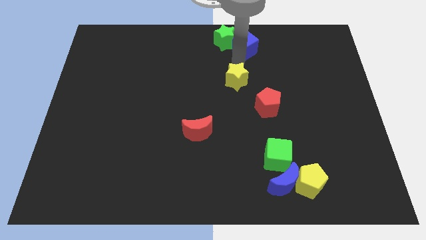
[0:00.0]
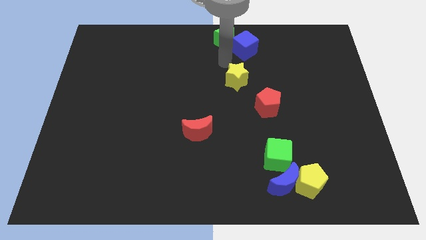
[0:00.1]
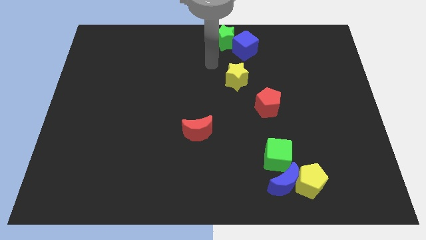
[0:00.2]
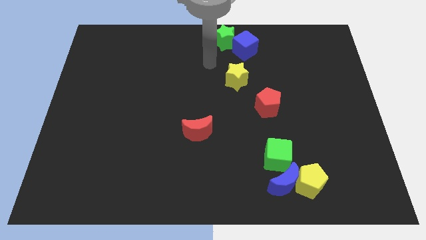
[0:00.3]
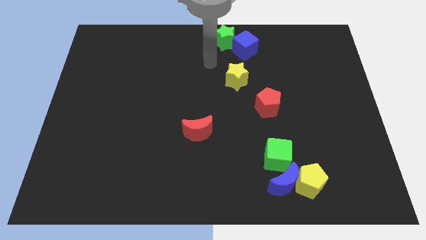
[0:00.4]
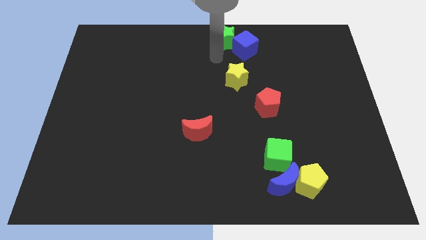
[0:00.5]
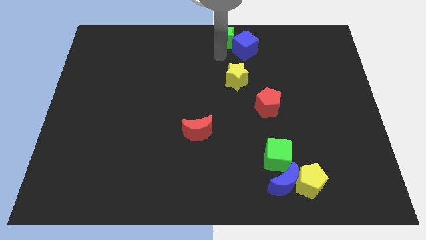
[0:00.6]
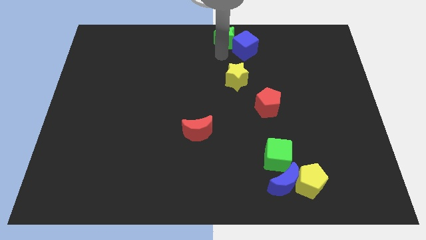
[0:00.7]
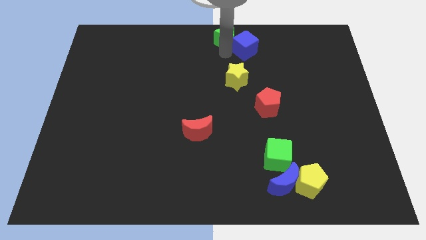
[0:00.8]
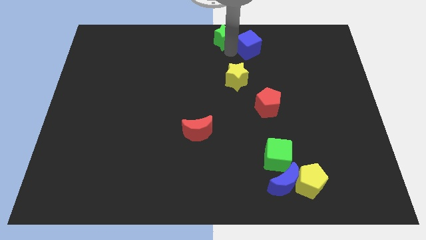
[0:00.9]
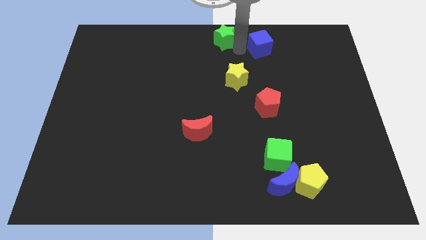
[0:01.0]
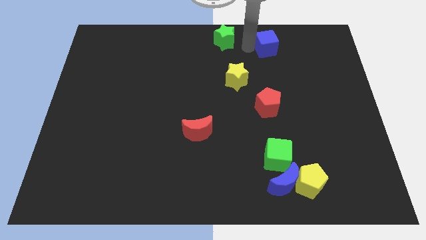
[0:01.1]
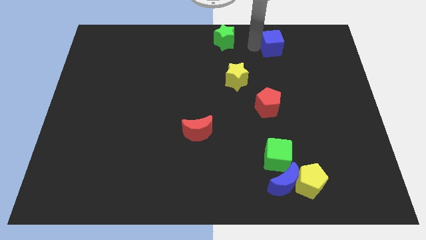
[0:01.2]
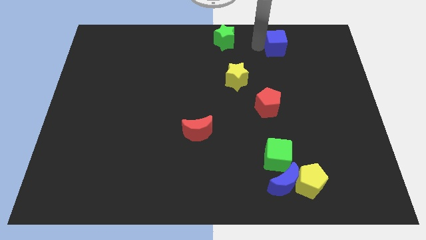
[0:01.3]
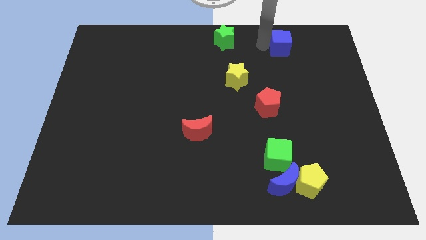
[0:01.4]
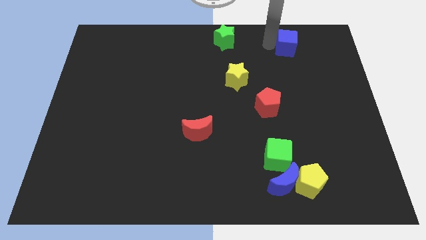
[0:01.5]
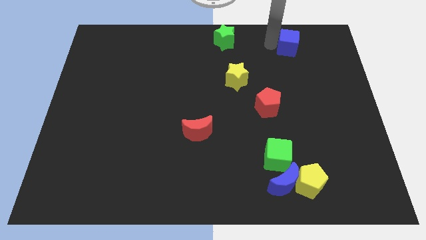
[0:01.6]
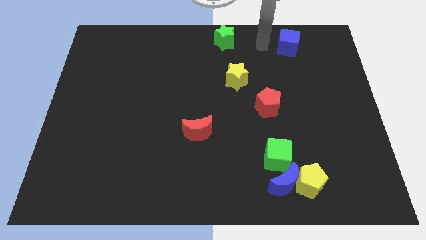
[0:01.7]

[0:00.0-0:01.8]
move the blue cube towards the top right

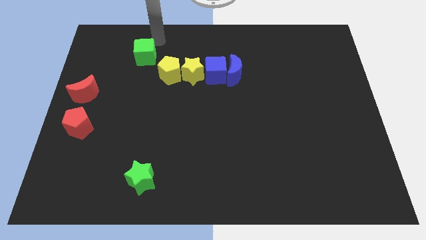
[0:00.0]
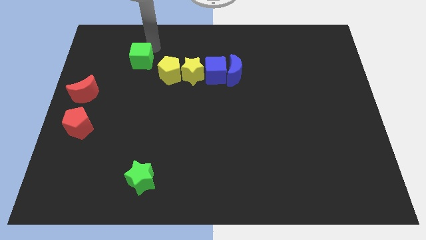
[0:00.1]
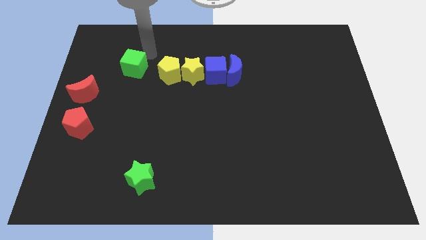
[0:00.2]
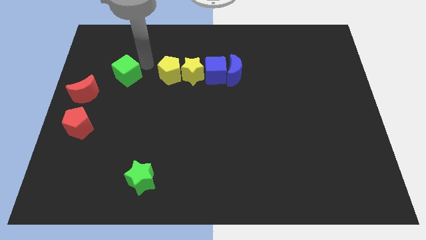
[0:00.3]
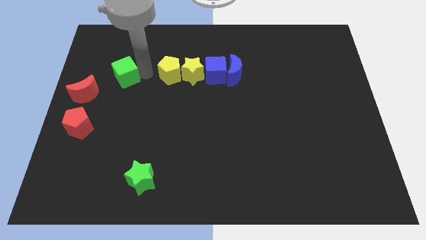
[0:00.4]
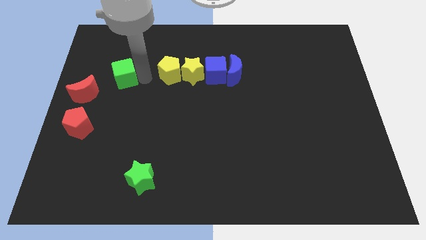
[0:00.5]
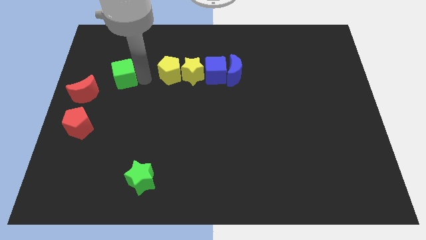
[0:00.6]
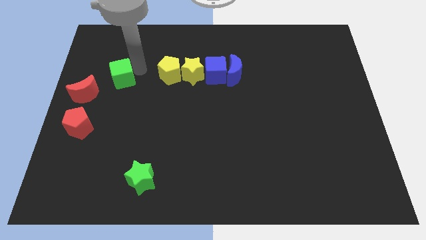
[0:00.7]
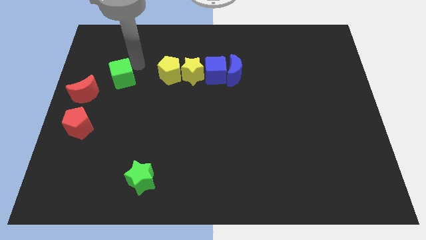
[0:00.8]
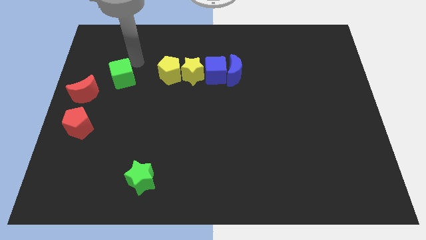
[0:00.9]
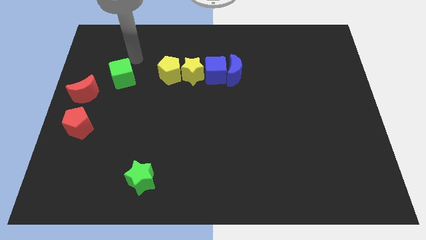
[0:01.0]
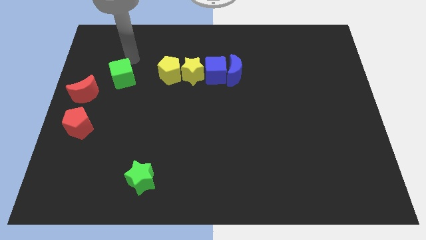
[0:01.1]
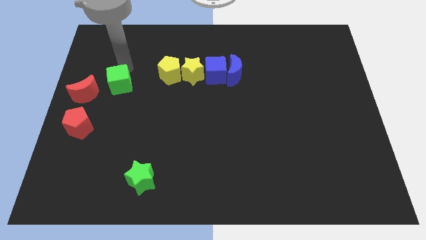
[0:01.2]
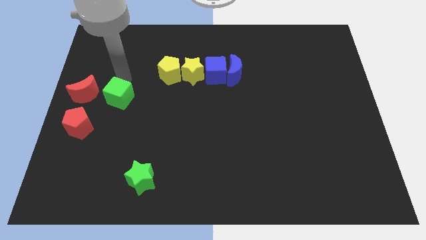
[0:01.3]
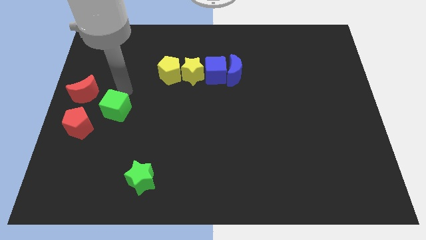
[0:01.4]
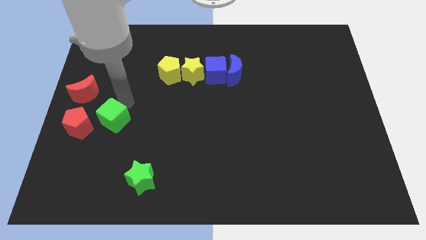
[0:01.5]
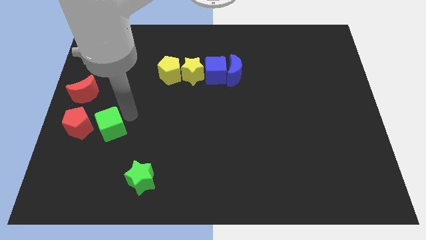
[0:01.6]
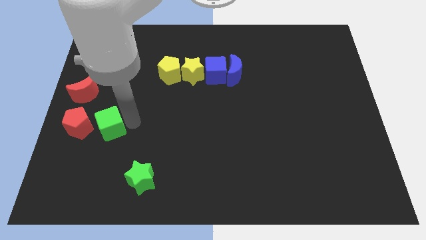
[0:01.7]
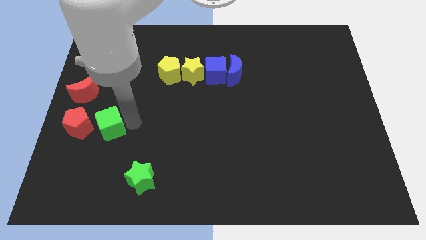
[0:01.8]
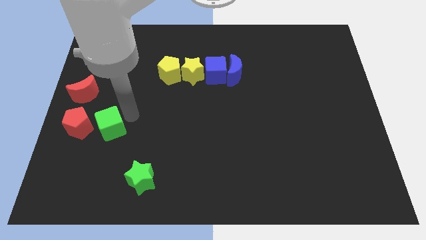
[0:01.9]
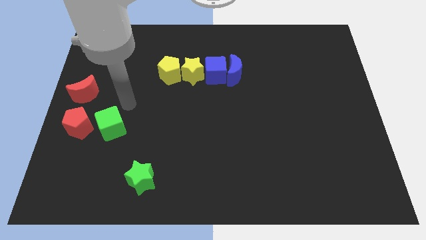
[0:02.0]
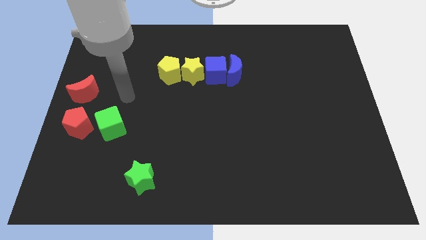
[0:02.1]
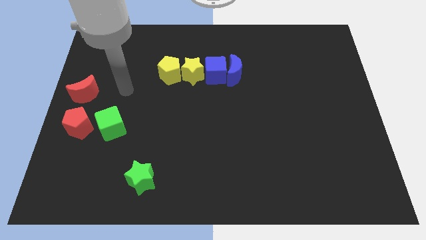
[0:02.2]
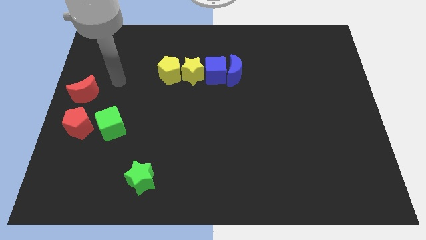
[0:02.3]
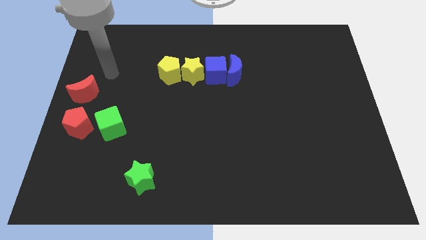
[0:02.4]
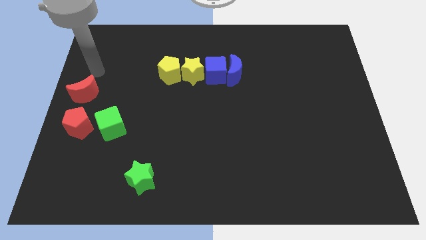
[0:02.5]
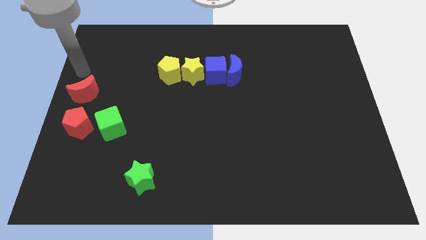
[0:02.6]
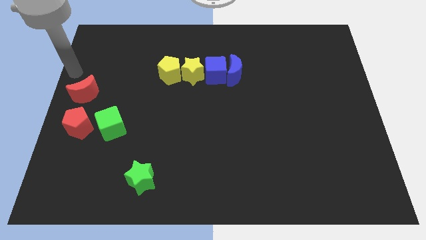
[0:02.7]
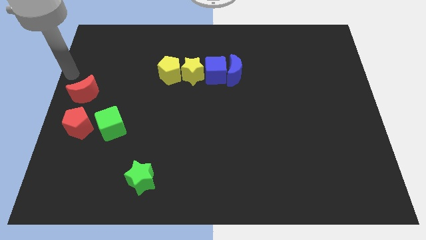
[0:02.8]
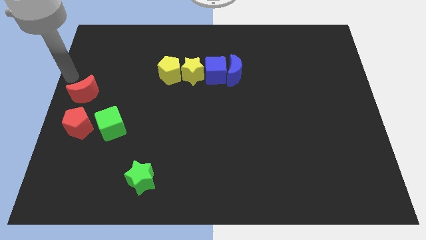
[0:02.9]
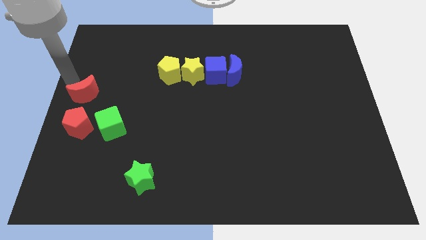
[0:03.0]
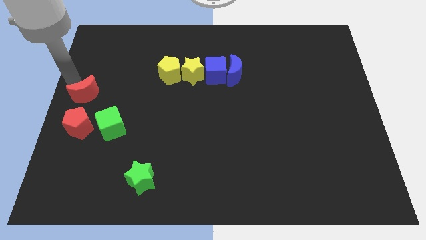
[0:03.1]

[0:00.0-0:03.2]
push the green cube to the right side of the red pentagon

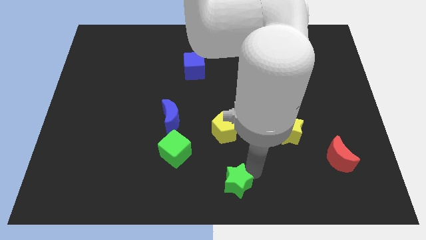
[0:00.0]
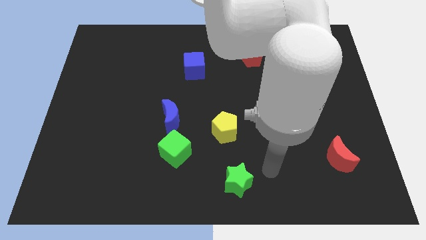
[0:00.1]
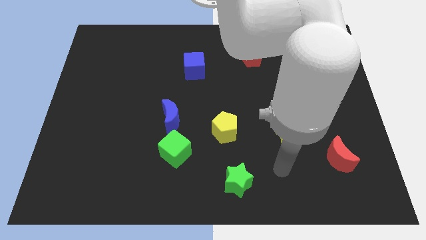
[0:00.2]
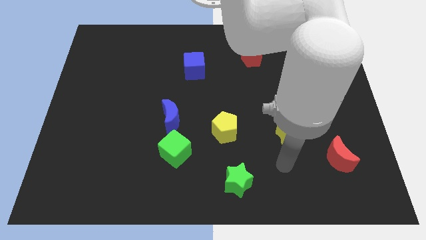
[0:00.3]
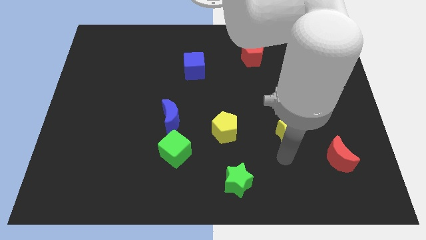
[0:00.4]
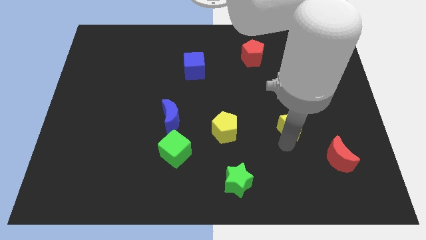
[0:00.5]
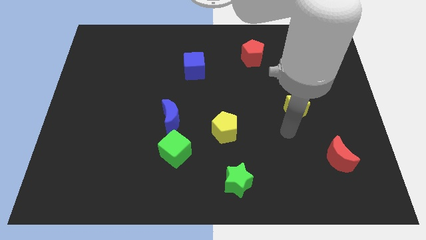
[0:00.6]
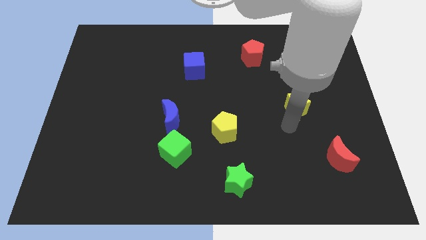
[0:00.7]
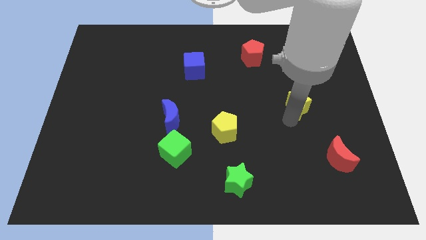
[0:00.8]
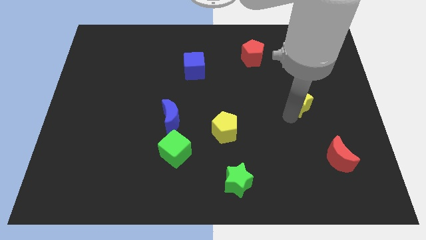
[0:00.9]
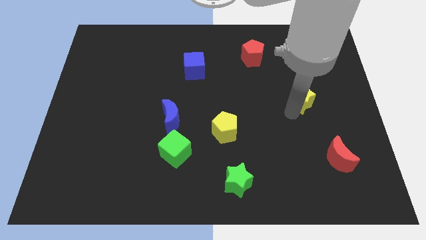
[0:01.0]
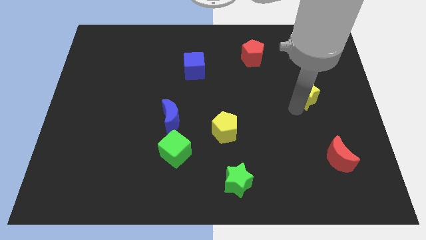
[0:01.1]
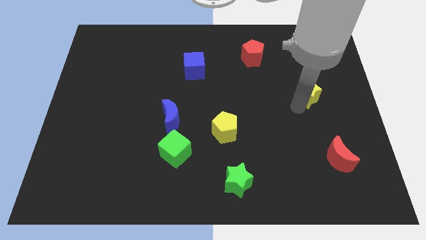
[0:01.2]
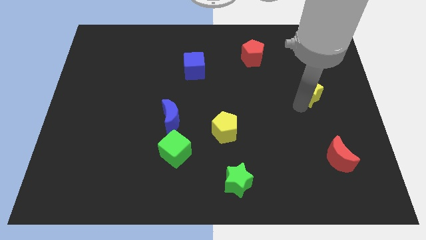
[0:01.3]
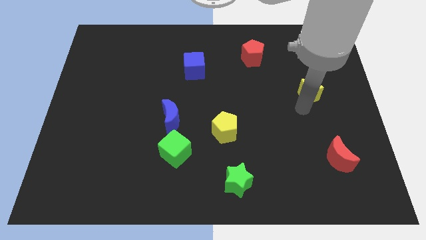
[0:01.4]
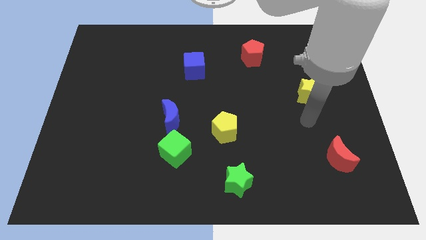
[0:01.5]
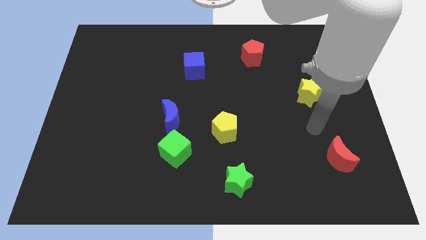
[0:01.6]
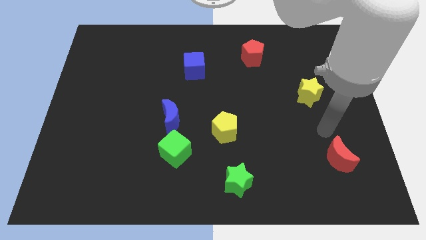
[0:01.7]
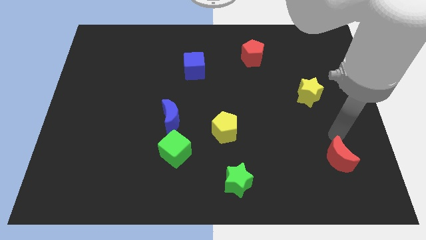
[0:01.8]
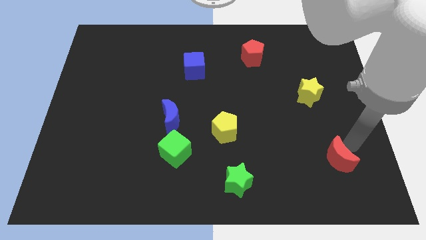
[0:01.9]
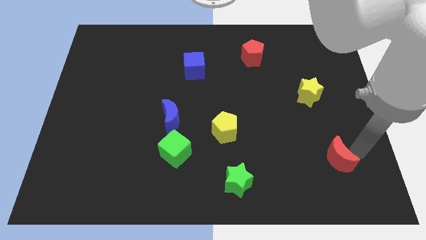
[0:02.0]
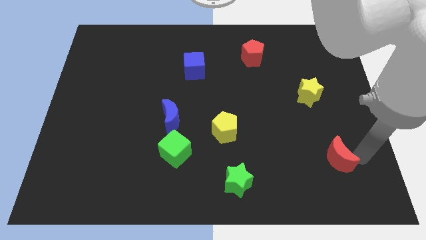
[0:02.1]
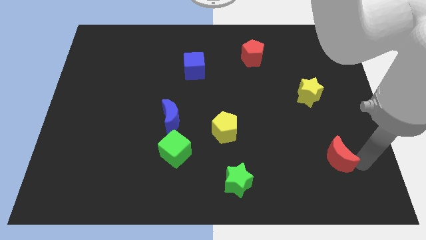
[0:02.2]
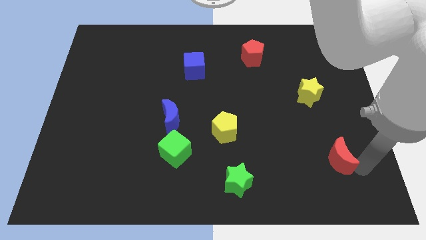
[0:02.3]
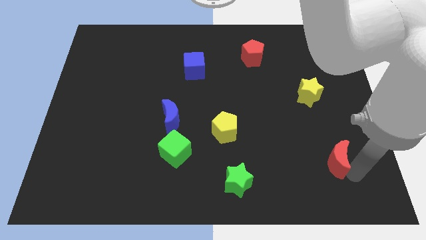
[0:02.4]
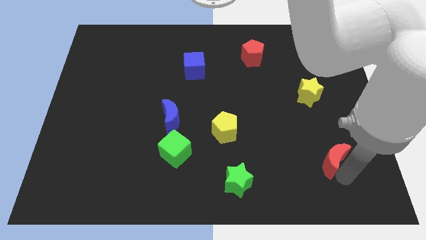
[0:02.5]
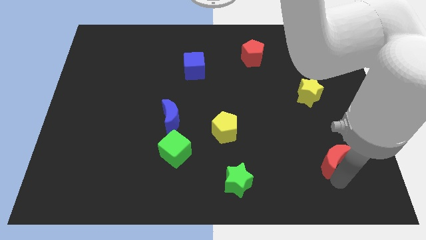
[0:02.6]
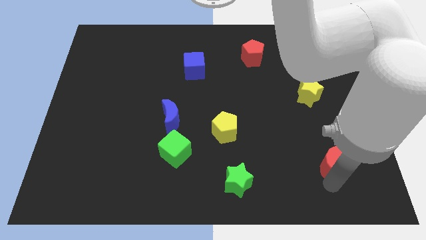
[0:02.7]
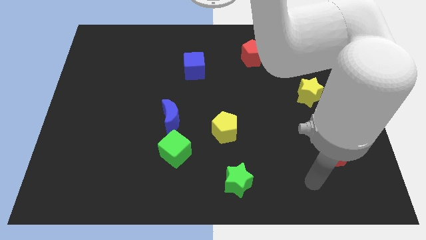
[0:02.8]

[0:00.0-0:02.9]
place yellow star and red moon in a vertical line

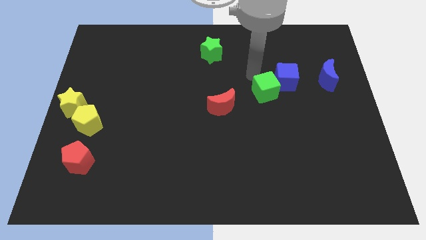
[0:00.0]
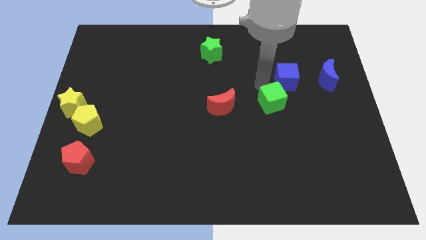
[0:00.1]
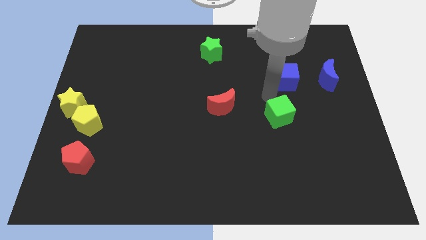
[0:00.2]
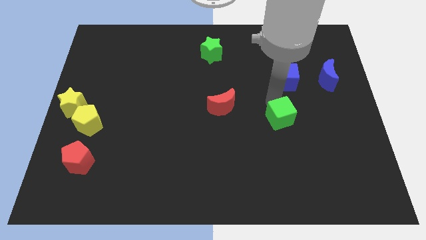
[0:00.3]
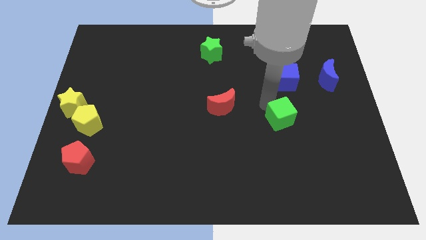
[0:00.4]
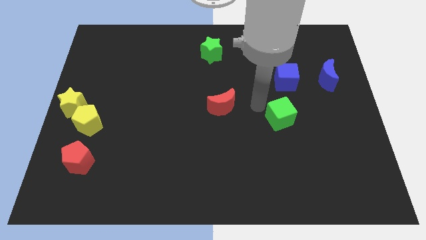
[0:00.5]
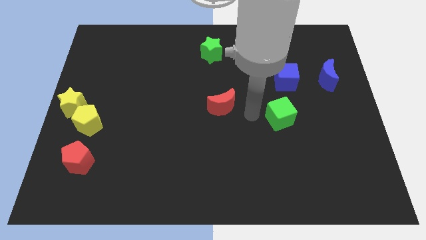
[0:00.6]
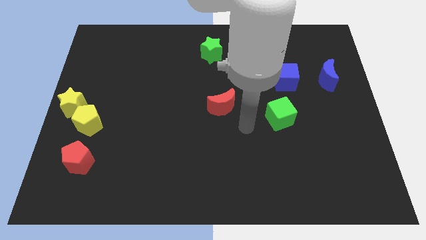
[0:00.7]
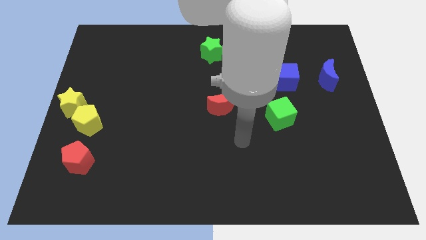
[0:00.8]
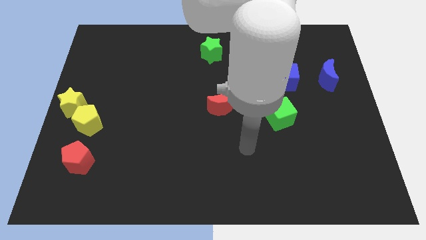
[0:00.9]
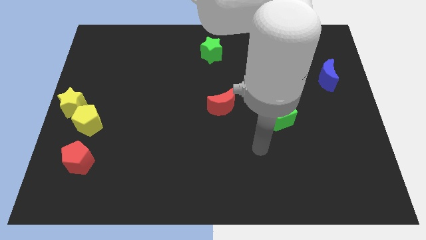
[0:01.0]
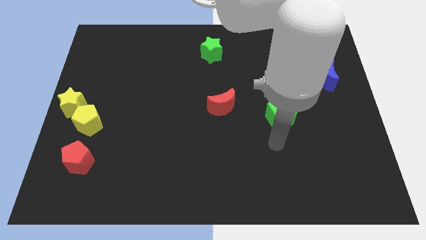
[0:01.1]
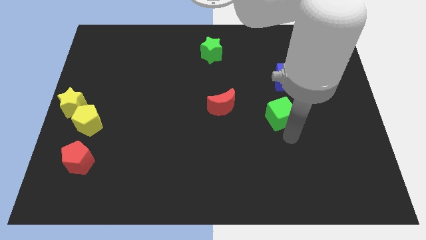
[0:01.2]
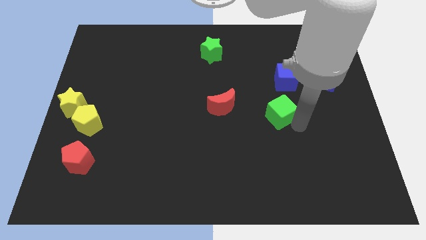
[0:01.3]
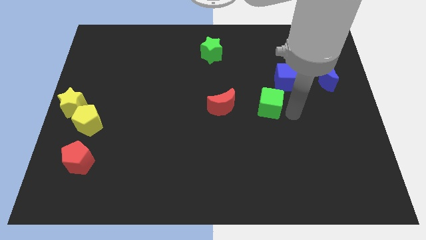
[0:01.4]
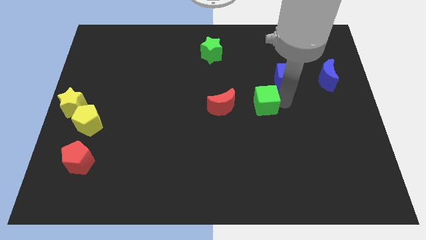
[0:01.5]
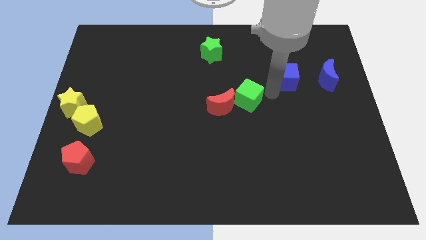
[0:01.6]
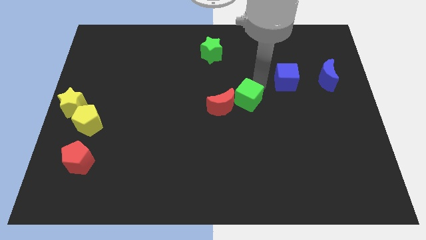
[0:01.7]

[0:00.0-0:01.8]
move the green cube to the right side of the red crescent
